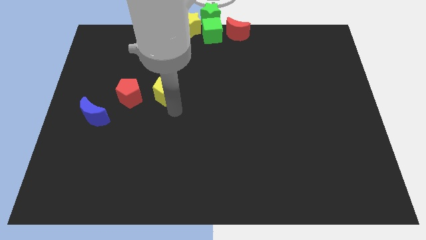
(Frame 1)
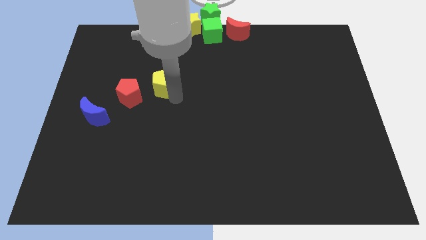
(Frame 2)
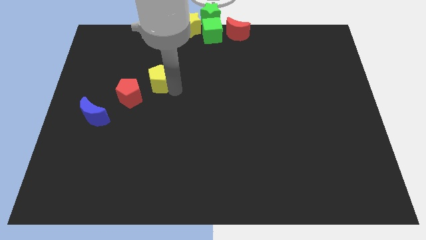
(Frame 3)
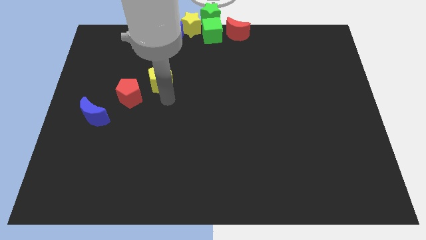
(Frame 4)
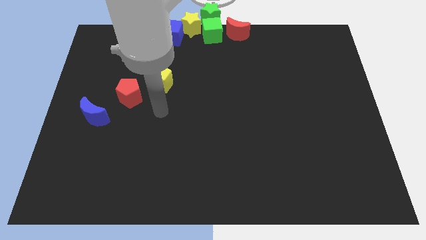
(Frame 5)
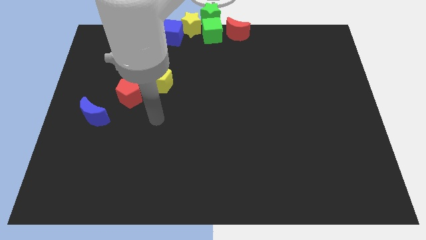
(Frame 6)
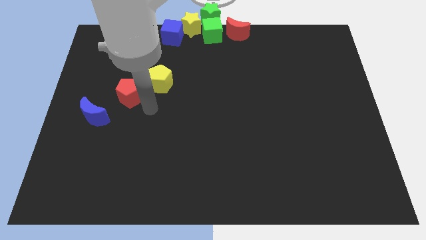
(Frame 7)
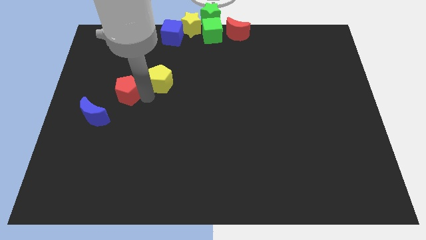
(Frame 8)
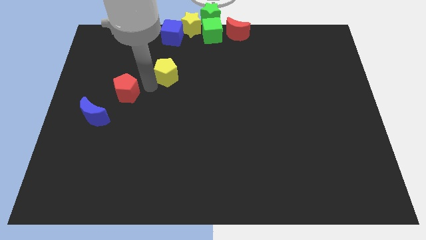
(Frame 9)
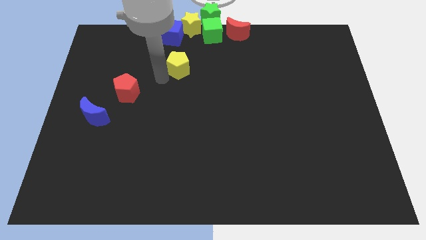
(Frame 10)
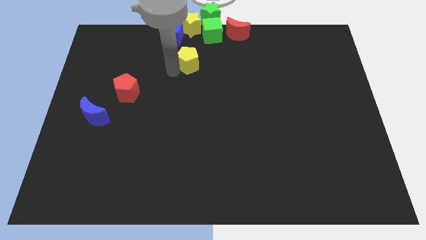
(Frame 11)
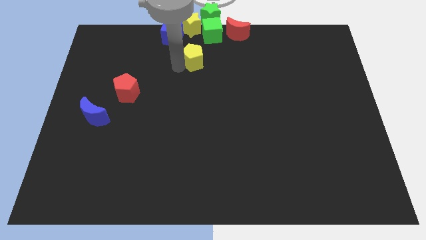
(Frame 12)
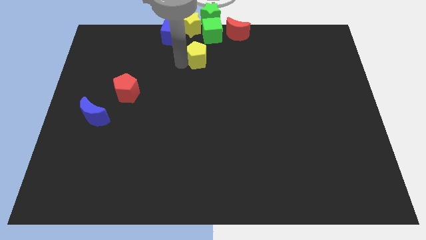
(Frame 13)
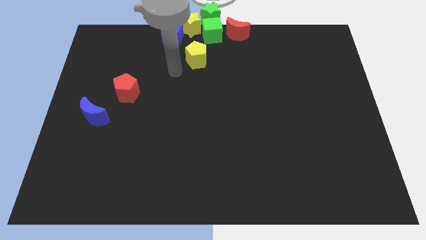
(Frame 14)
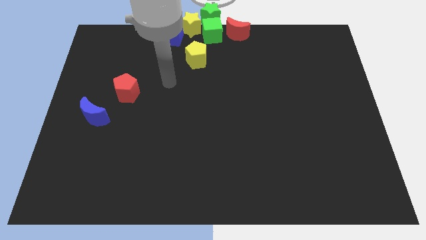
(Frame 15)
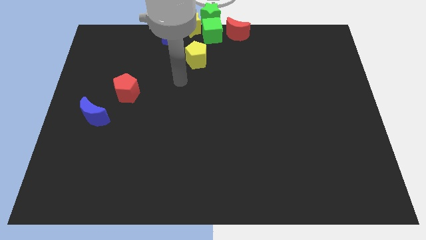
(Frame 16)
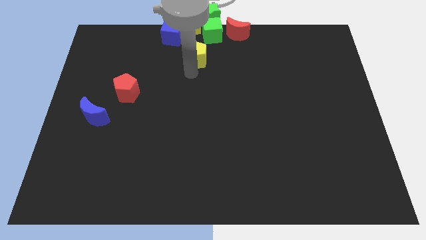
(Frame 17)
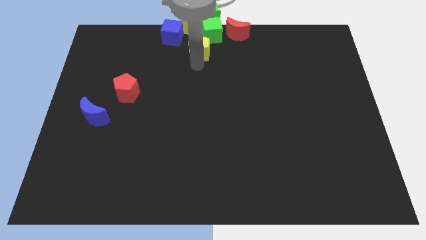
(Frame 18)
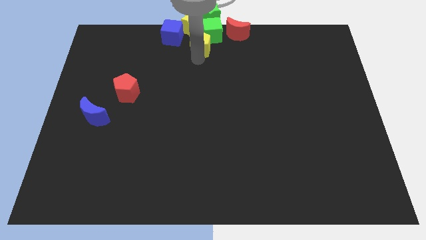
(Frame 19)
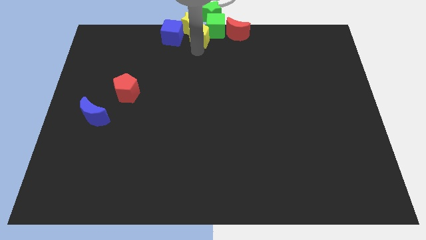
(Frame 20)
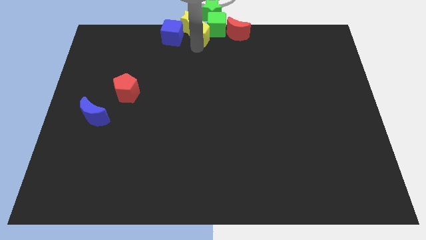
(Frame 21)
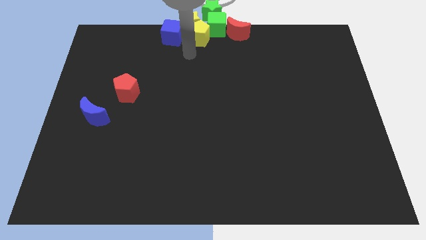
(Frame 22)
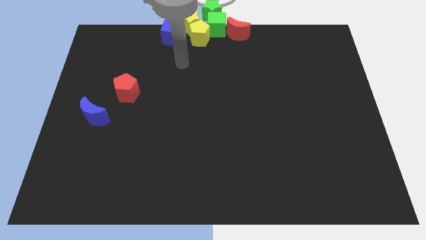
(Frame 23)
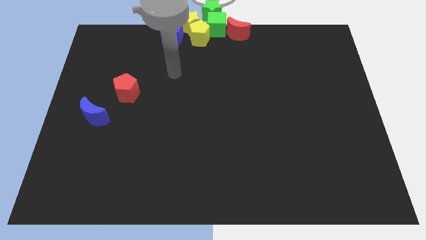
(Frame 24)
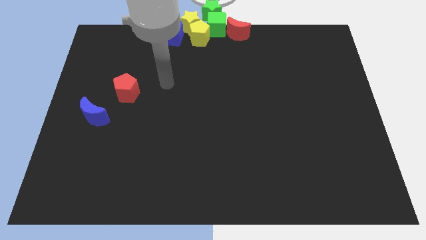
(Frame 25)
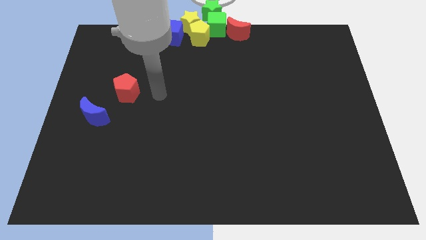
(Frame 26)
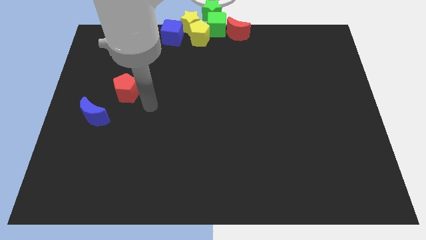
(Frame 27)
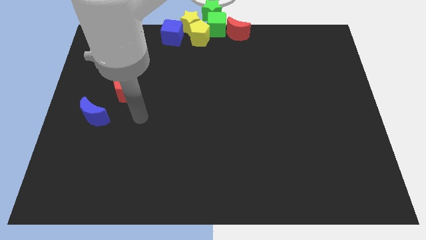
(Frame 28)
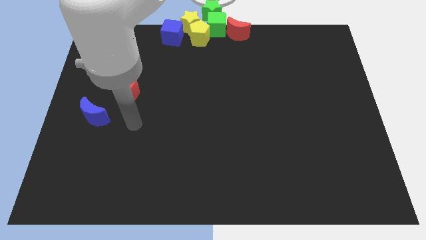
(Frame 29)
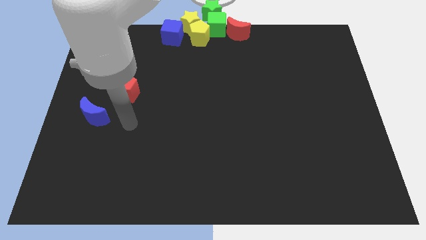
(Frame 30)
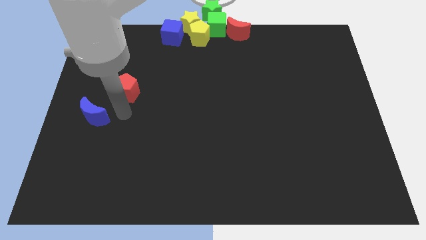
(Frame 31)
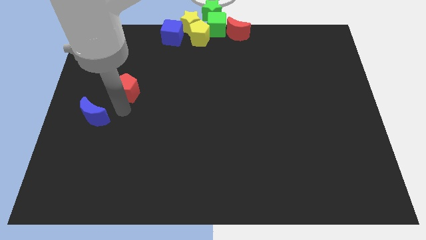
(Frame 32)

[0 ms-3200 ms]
push the yellow pentagon into the yellow star

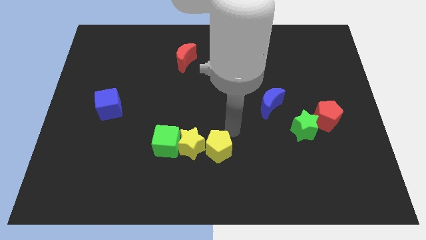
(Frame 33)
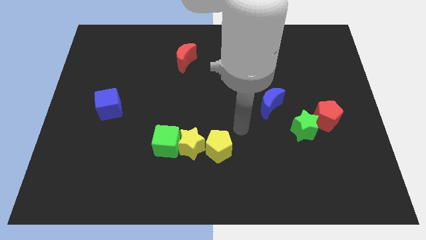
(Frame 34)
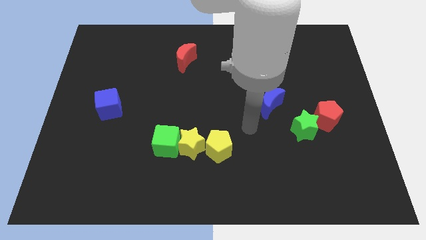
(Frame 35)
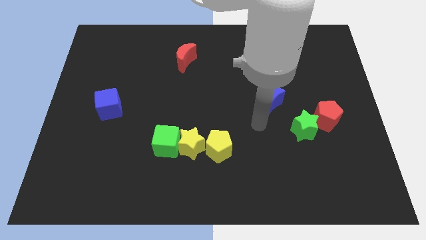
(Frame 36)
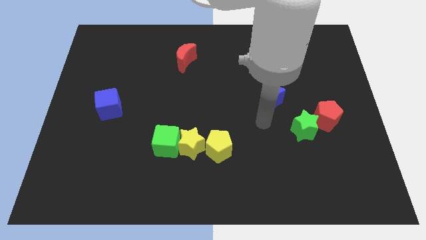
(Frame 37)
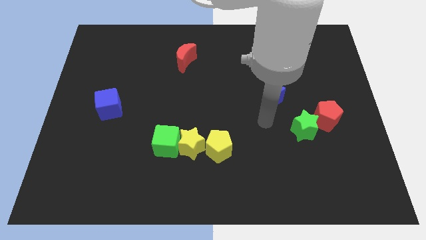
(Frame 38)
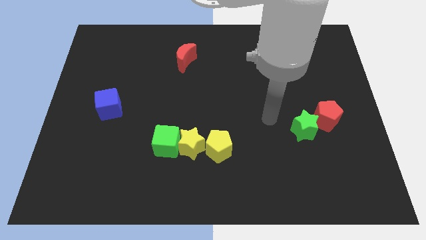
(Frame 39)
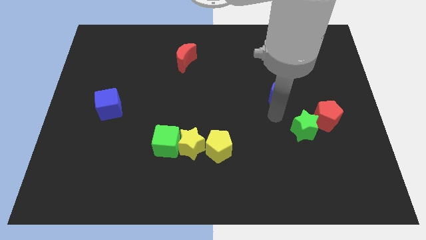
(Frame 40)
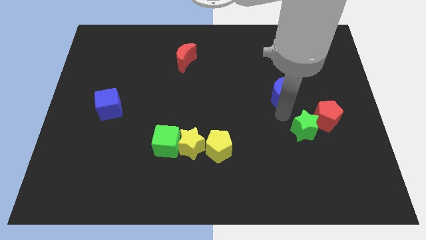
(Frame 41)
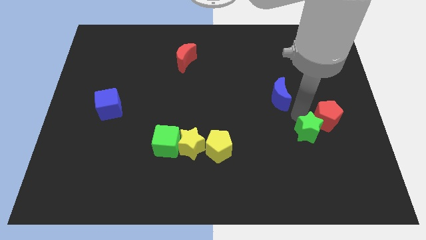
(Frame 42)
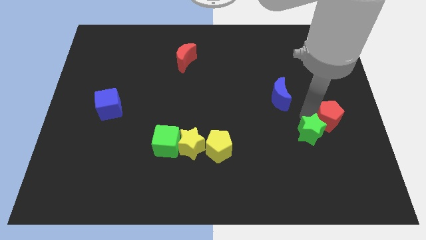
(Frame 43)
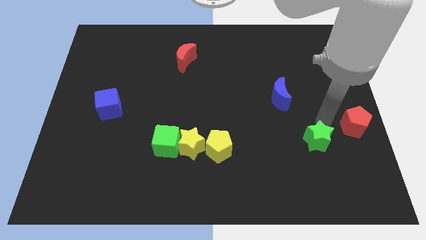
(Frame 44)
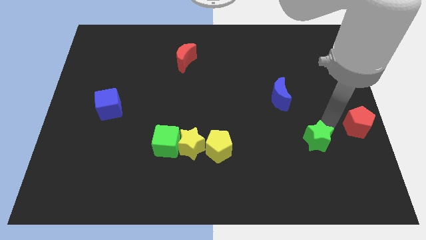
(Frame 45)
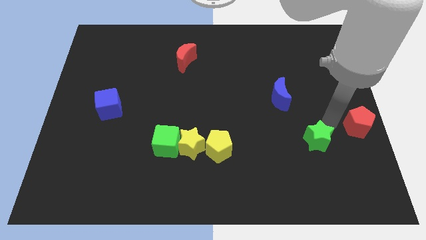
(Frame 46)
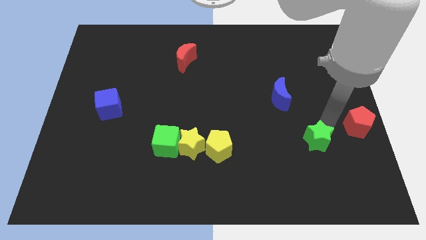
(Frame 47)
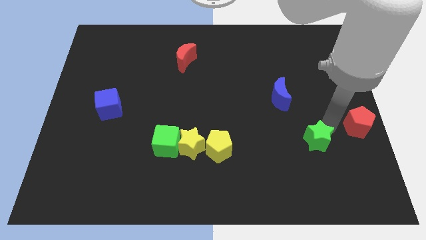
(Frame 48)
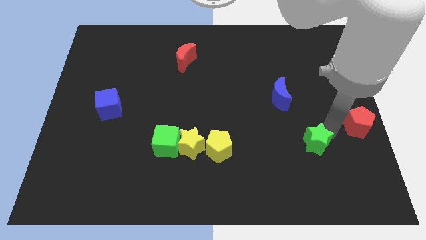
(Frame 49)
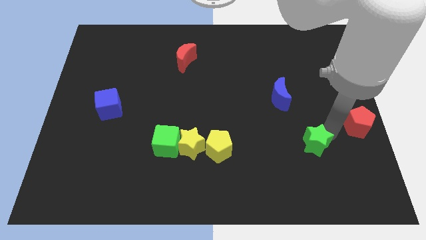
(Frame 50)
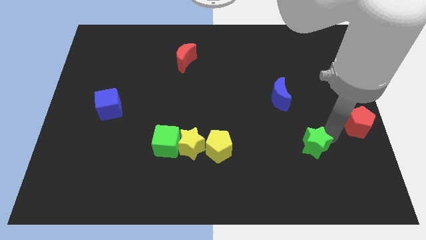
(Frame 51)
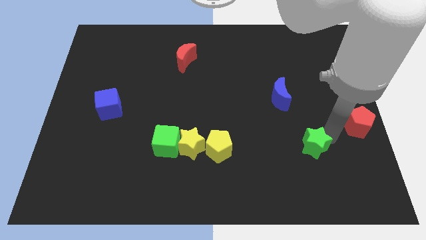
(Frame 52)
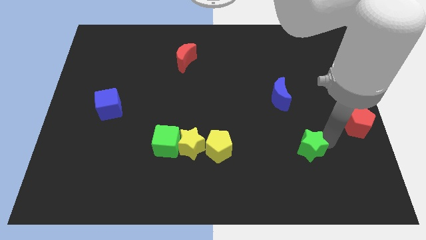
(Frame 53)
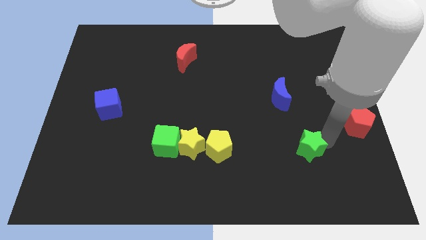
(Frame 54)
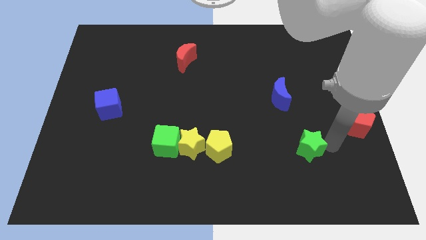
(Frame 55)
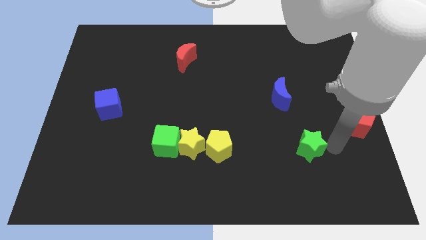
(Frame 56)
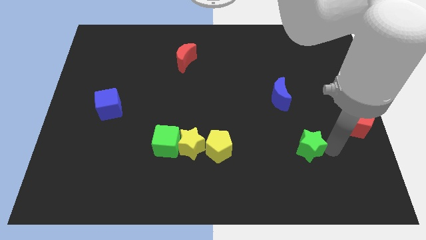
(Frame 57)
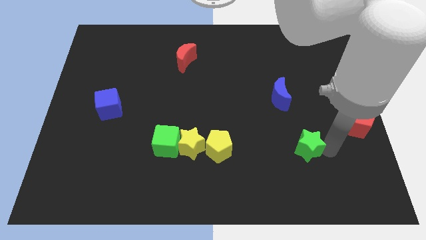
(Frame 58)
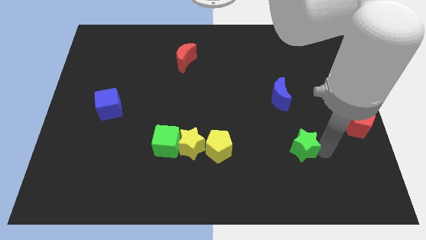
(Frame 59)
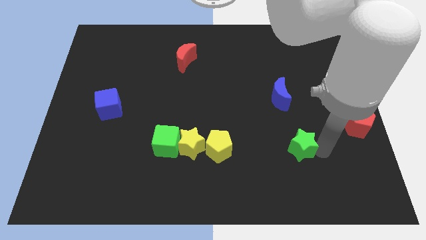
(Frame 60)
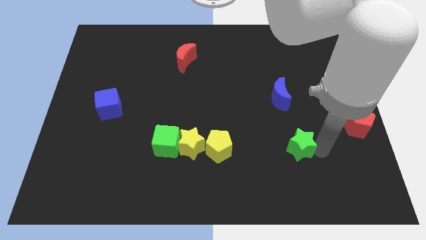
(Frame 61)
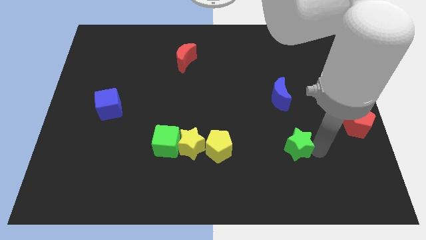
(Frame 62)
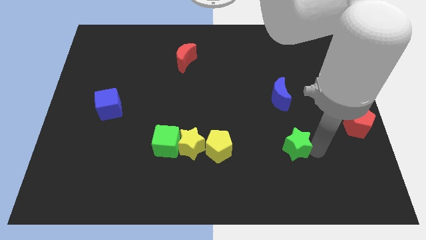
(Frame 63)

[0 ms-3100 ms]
separate green star red pentagon and blue moon from each other

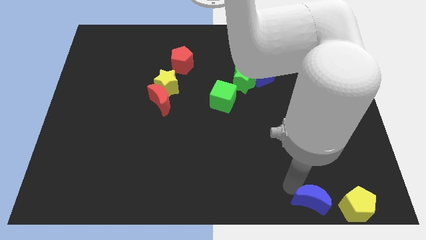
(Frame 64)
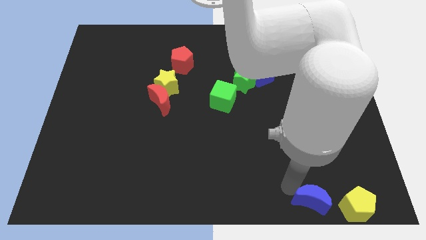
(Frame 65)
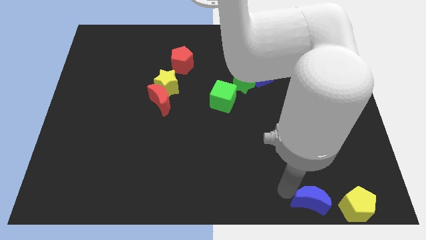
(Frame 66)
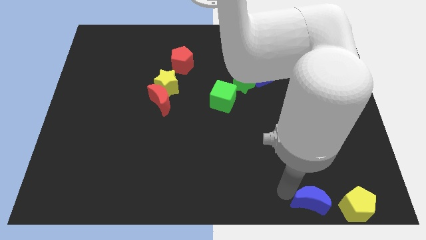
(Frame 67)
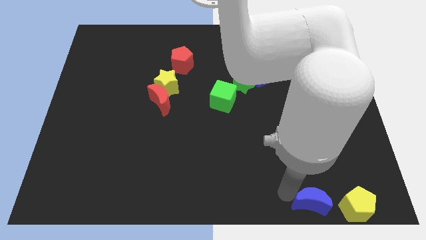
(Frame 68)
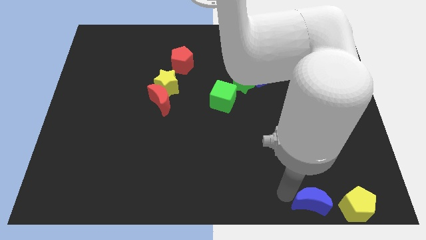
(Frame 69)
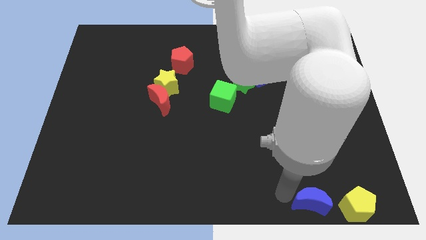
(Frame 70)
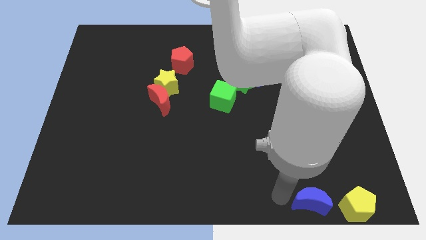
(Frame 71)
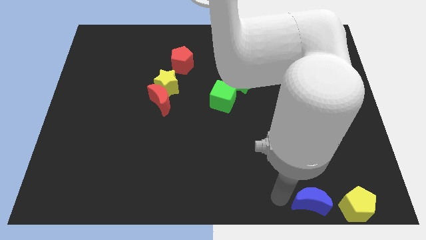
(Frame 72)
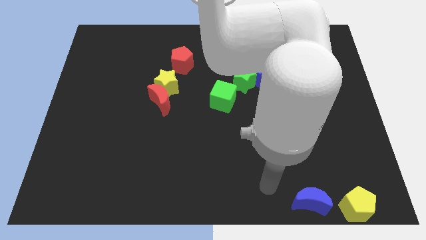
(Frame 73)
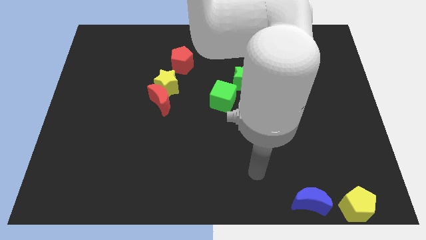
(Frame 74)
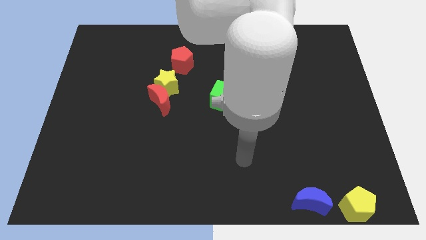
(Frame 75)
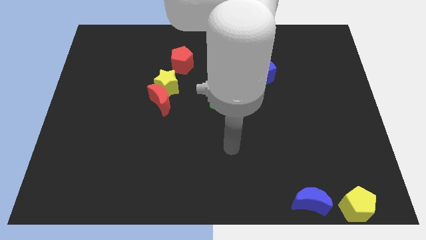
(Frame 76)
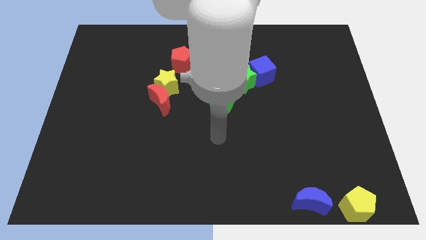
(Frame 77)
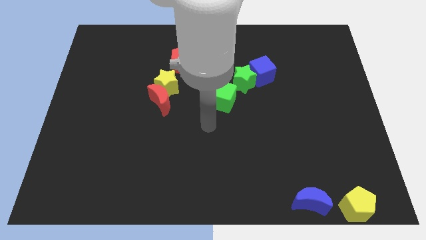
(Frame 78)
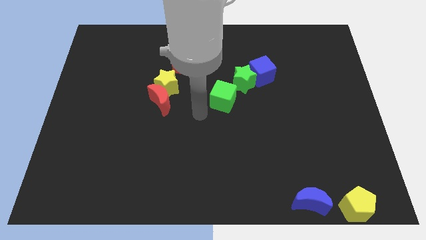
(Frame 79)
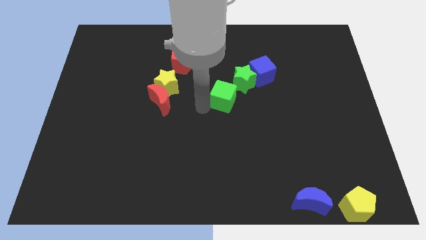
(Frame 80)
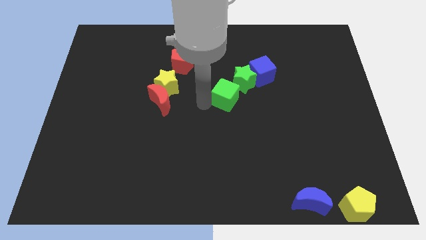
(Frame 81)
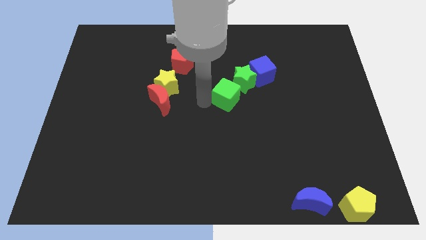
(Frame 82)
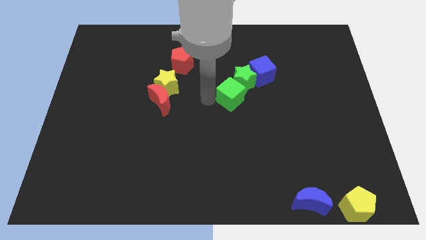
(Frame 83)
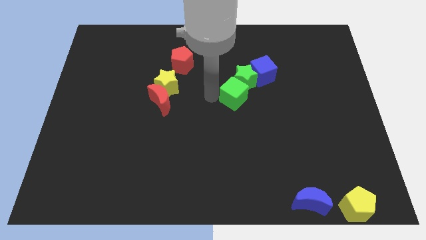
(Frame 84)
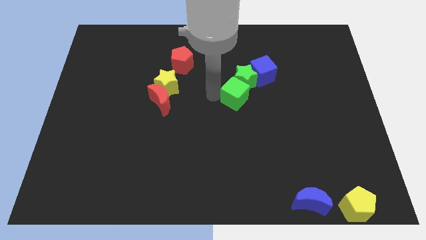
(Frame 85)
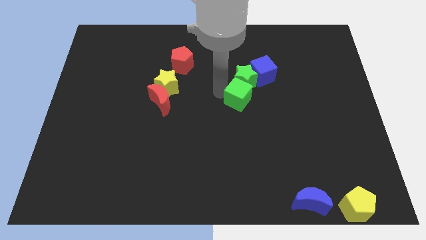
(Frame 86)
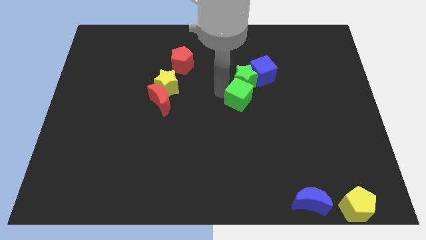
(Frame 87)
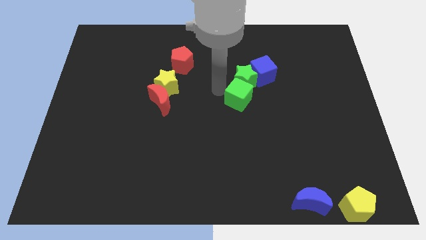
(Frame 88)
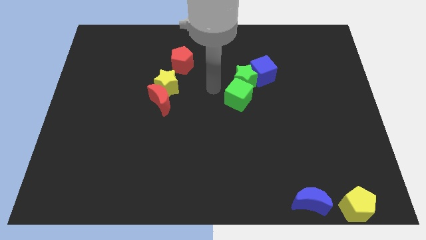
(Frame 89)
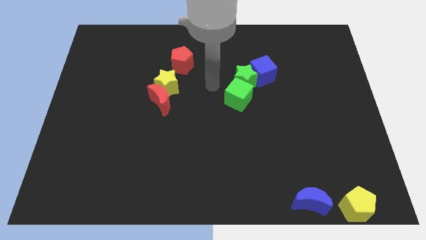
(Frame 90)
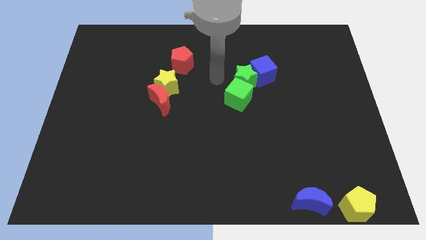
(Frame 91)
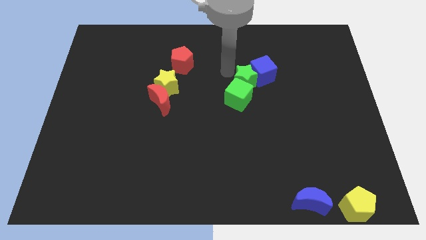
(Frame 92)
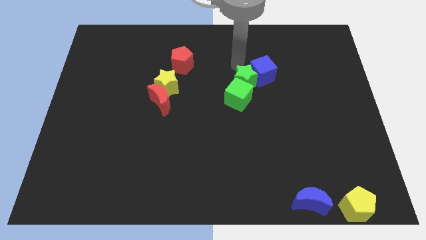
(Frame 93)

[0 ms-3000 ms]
place your arm in between red pentagon and green star
